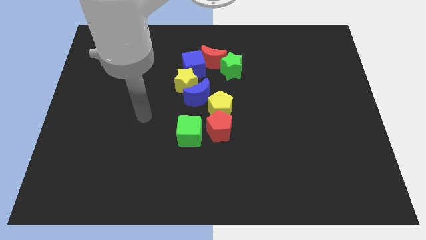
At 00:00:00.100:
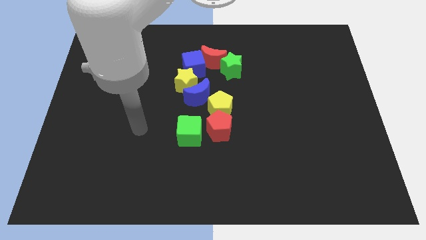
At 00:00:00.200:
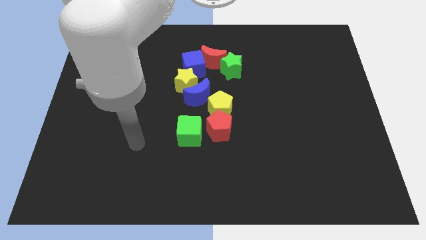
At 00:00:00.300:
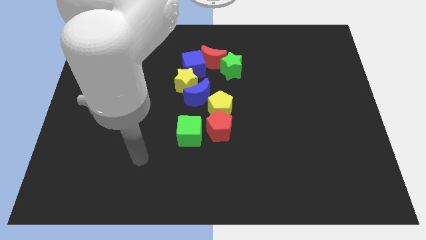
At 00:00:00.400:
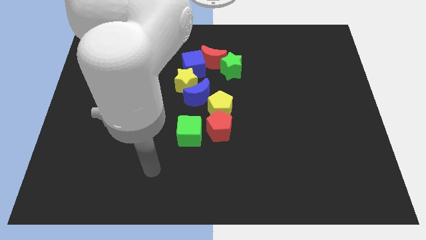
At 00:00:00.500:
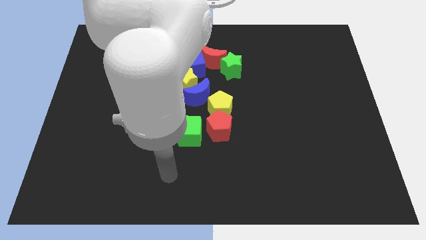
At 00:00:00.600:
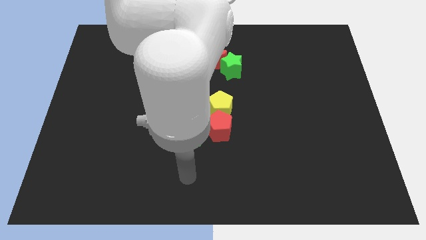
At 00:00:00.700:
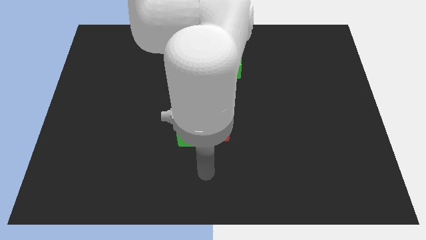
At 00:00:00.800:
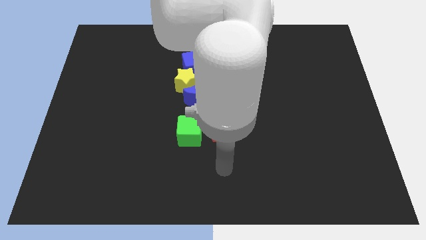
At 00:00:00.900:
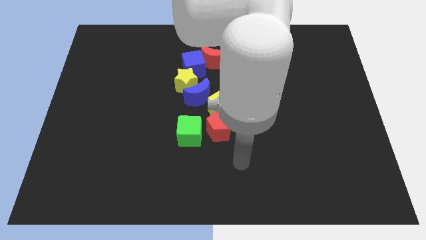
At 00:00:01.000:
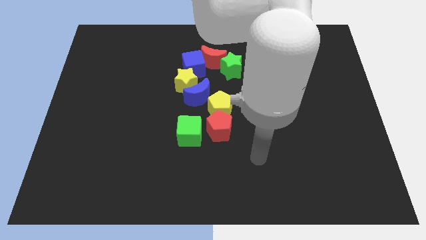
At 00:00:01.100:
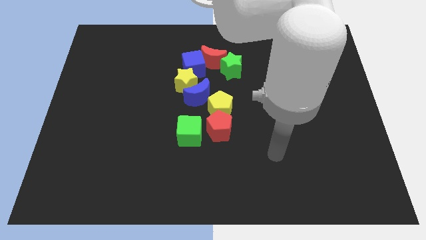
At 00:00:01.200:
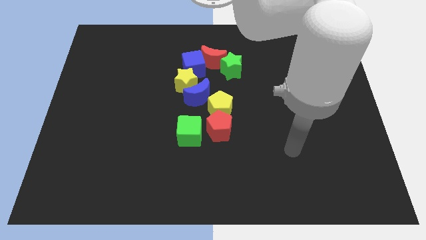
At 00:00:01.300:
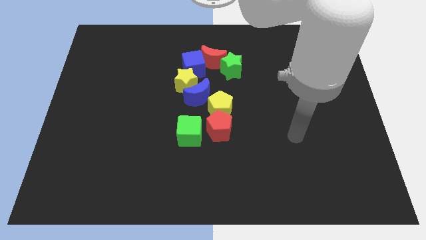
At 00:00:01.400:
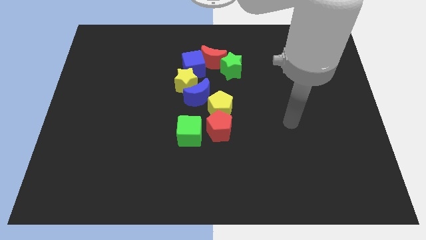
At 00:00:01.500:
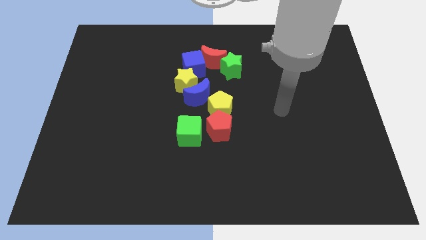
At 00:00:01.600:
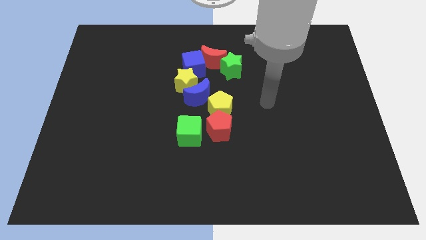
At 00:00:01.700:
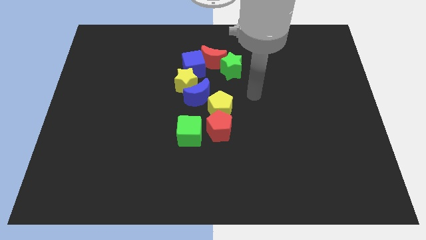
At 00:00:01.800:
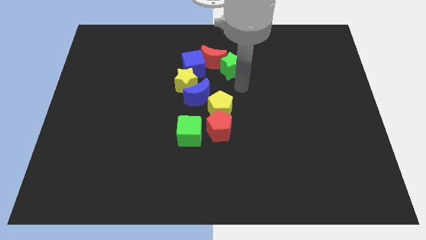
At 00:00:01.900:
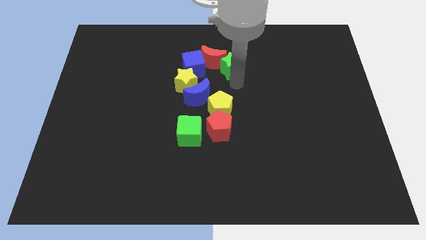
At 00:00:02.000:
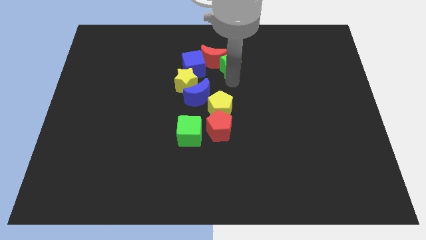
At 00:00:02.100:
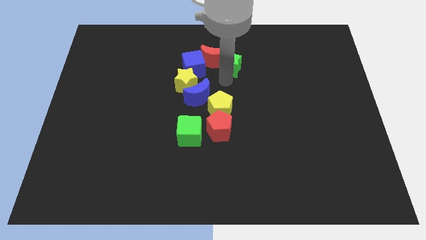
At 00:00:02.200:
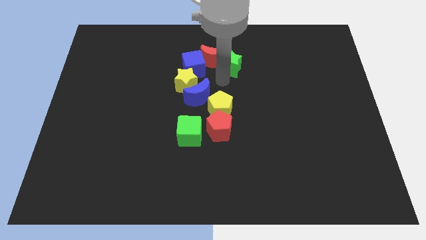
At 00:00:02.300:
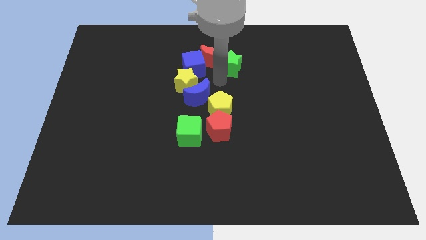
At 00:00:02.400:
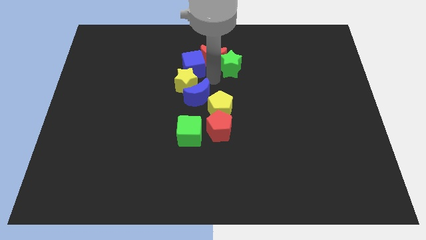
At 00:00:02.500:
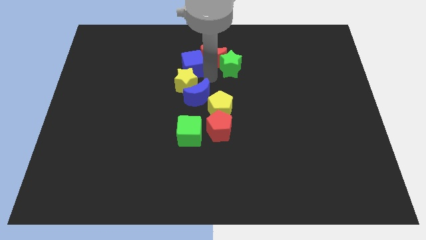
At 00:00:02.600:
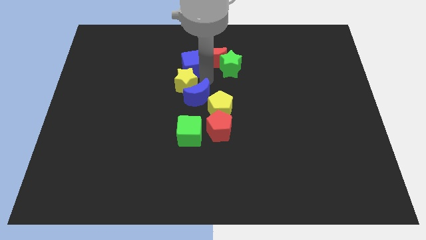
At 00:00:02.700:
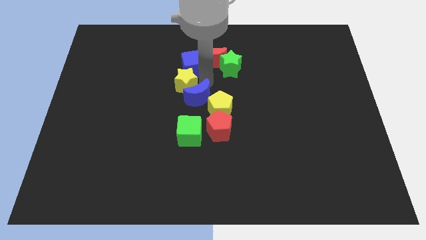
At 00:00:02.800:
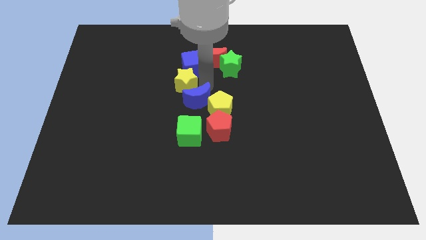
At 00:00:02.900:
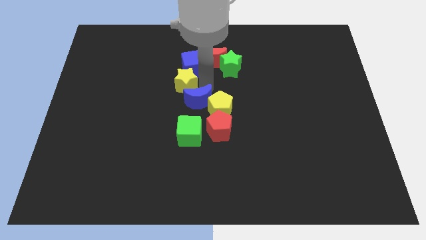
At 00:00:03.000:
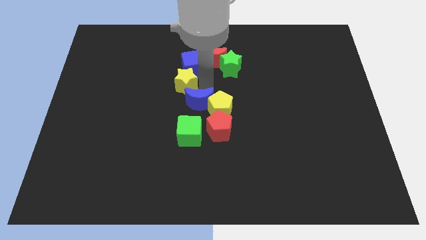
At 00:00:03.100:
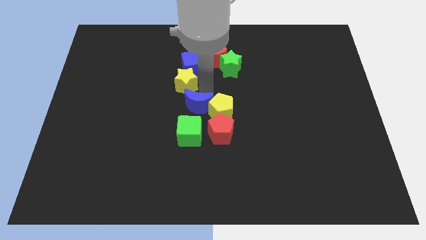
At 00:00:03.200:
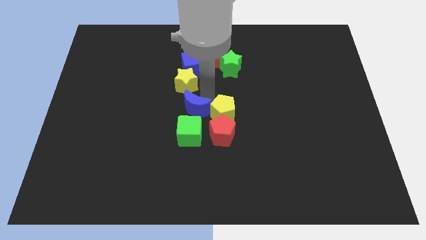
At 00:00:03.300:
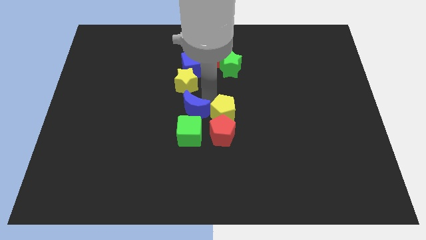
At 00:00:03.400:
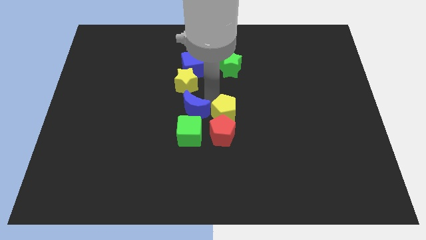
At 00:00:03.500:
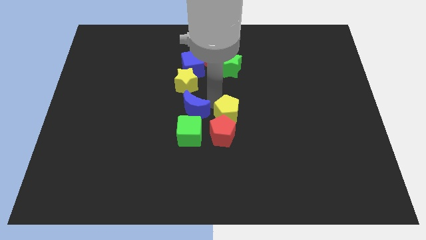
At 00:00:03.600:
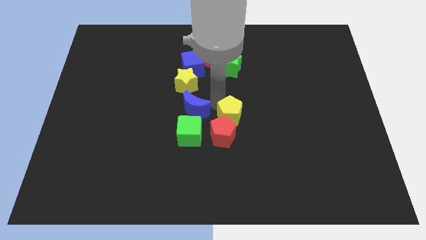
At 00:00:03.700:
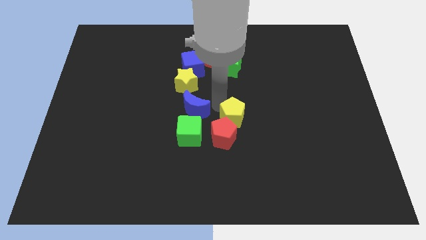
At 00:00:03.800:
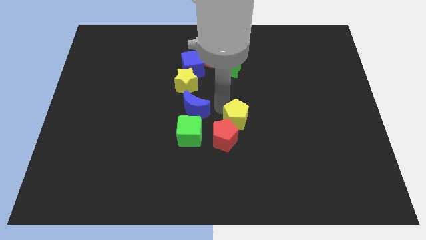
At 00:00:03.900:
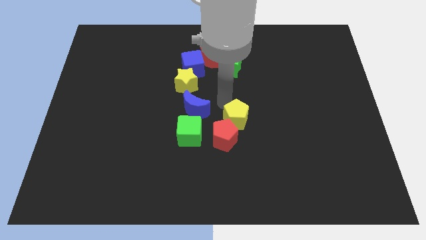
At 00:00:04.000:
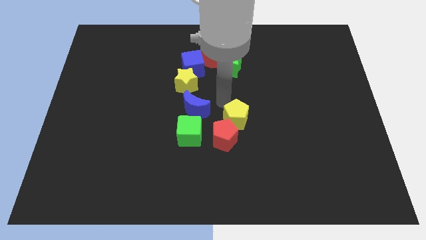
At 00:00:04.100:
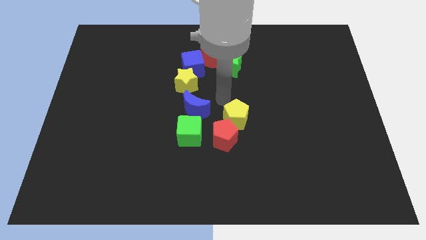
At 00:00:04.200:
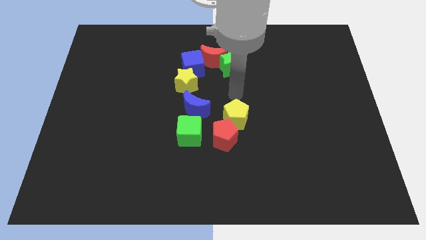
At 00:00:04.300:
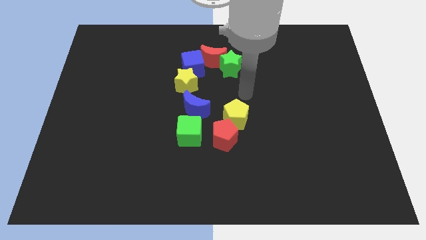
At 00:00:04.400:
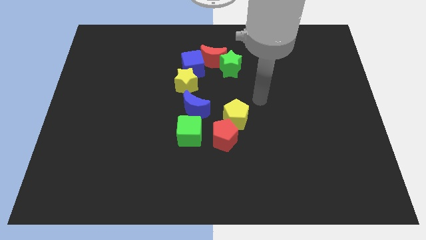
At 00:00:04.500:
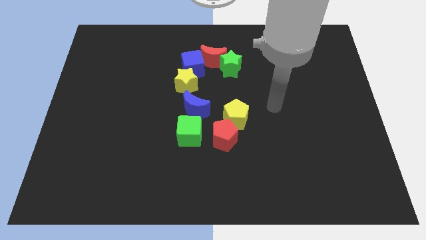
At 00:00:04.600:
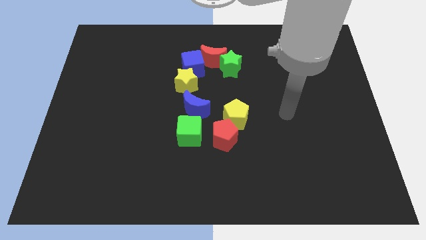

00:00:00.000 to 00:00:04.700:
separate the yellow pentagon and blue cube

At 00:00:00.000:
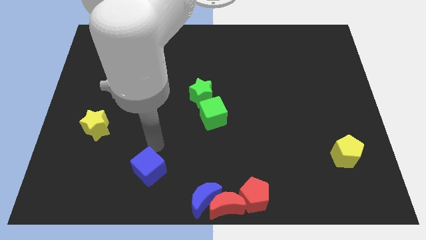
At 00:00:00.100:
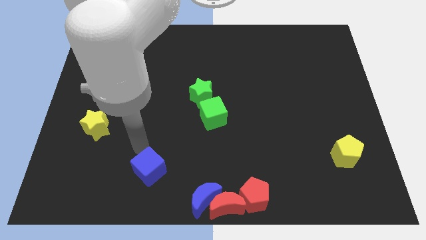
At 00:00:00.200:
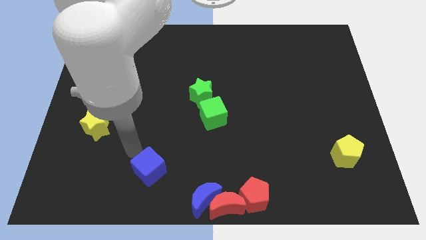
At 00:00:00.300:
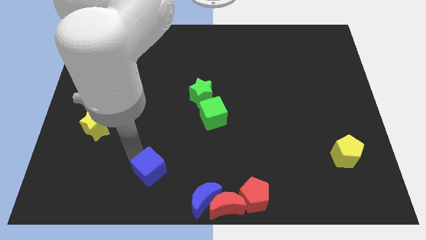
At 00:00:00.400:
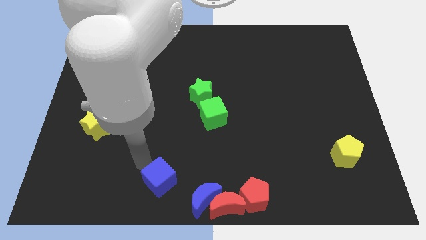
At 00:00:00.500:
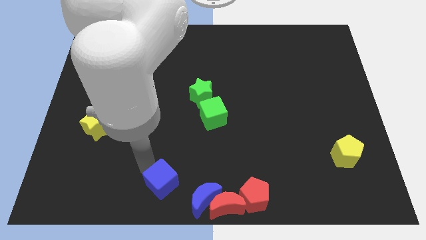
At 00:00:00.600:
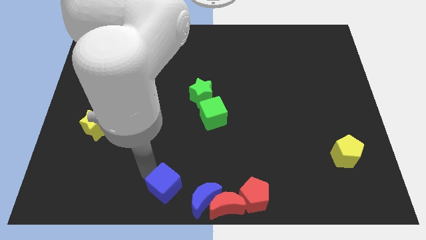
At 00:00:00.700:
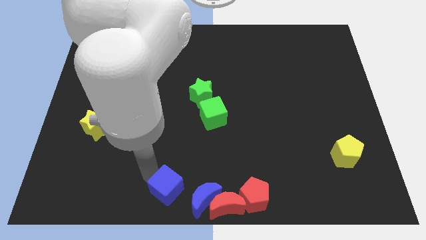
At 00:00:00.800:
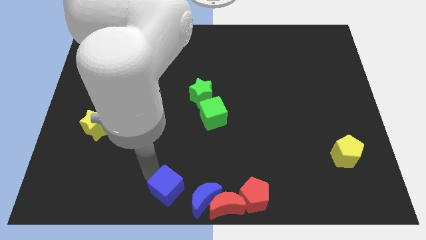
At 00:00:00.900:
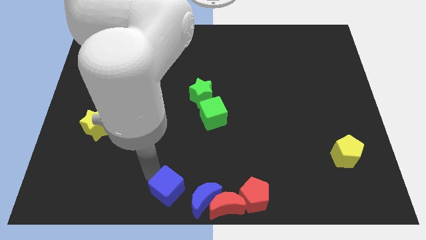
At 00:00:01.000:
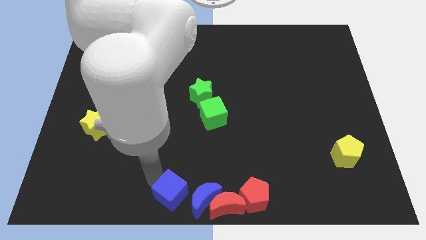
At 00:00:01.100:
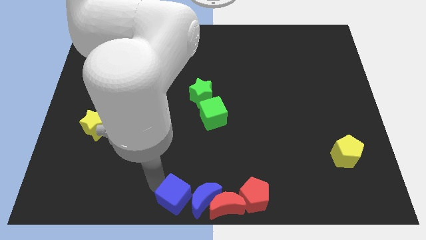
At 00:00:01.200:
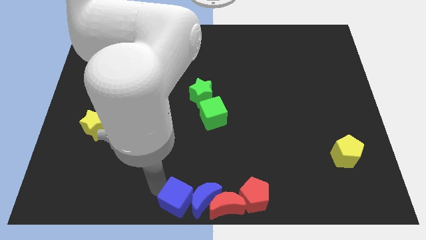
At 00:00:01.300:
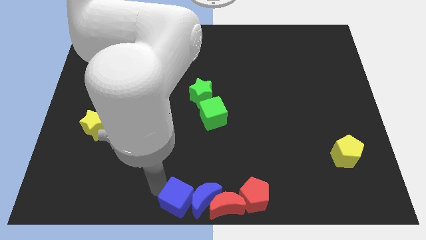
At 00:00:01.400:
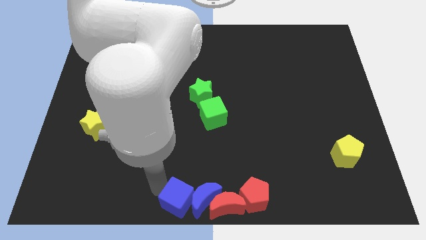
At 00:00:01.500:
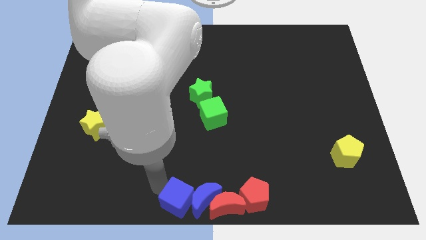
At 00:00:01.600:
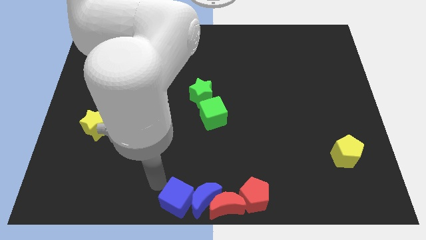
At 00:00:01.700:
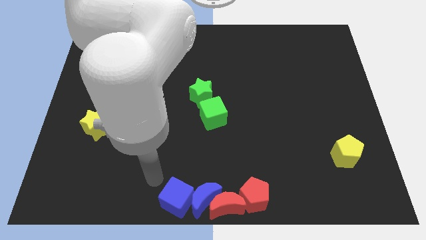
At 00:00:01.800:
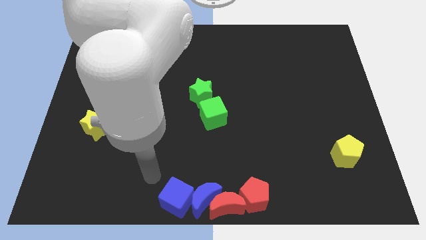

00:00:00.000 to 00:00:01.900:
push the blue cube towards the left side of the blue crescent

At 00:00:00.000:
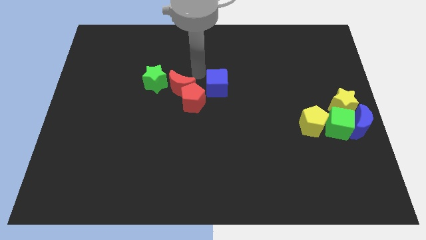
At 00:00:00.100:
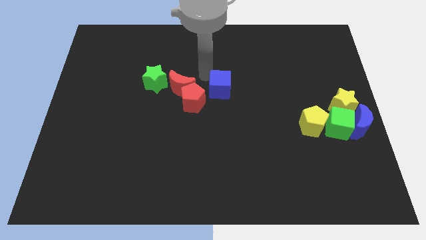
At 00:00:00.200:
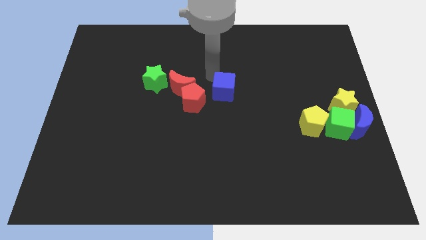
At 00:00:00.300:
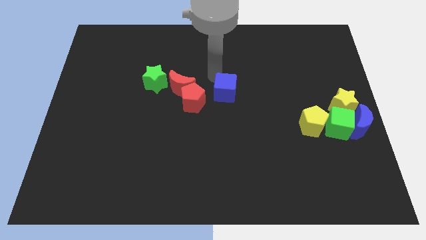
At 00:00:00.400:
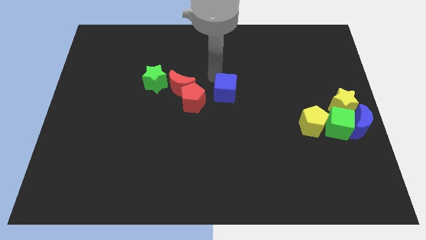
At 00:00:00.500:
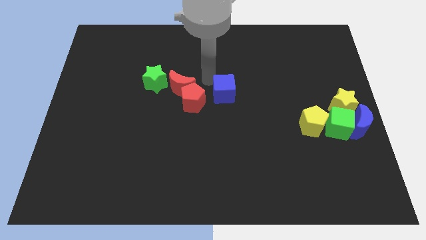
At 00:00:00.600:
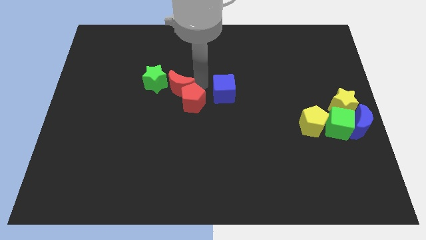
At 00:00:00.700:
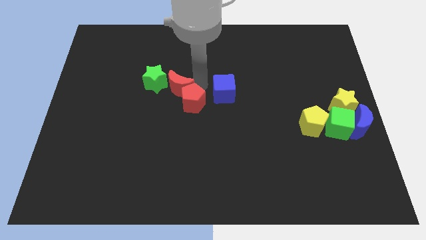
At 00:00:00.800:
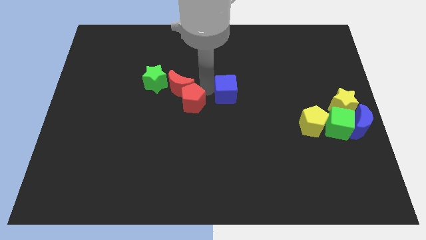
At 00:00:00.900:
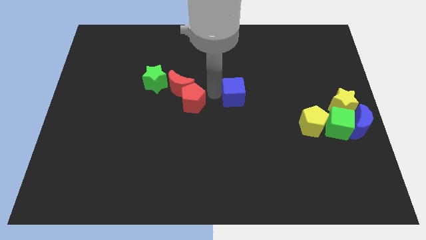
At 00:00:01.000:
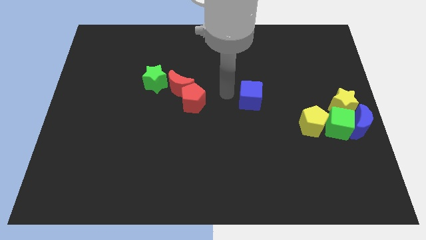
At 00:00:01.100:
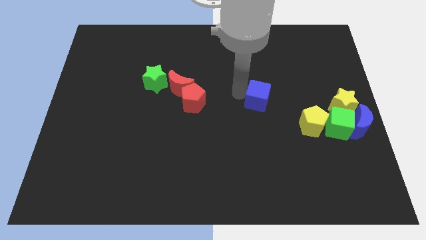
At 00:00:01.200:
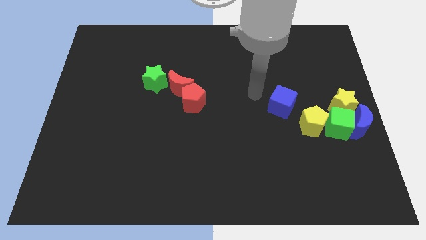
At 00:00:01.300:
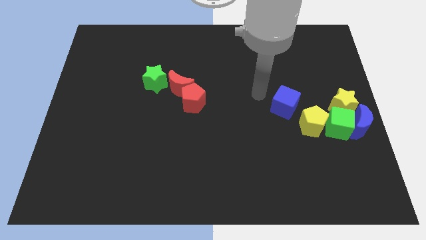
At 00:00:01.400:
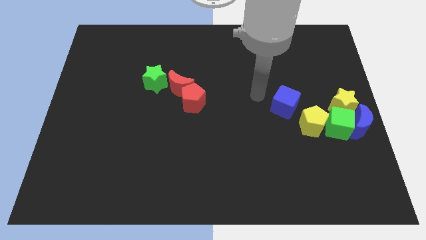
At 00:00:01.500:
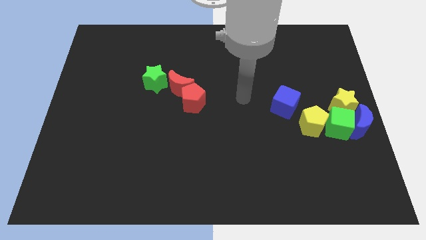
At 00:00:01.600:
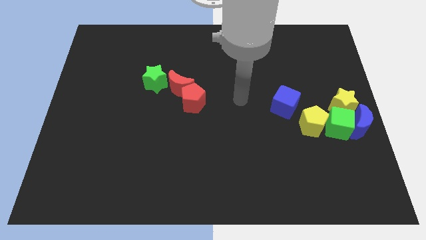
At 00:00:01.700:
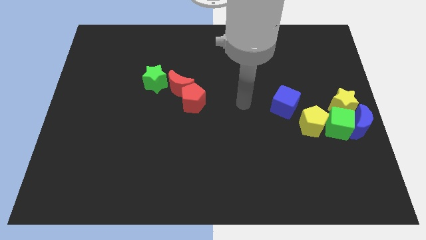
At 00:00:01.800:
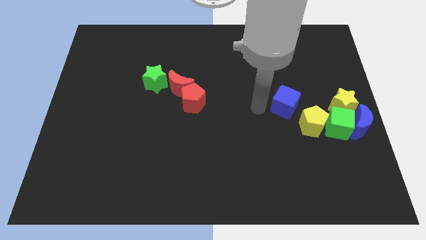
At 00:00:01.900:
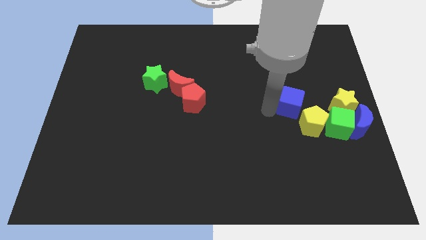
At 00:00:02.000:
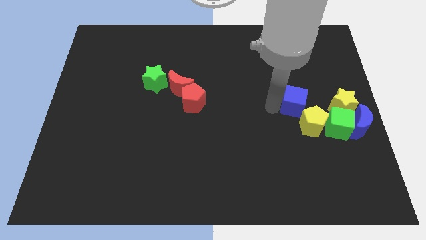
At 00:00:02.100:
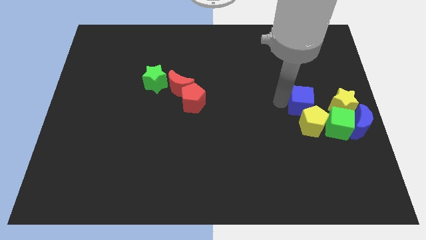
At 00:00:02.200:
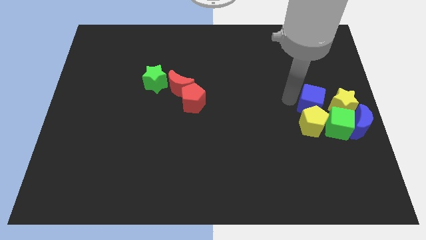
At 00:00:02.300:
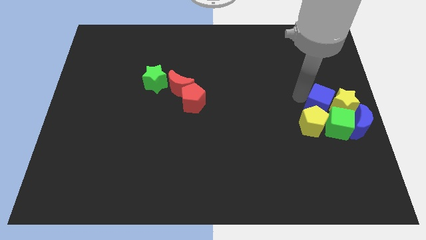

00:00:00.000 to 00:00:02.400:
push blue cube above yellow pentagon
